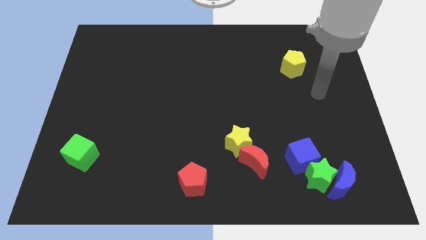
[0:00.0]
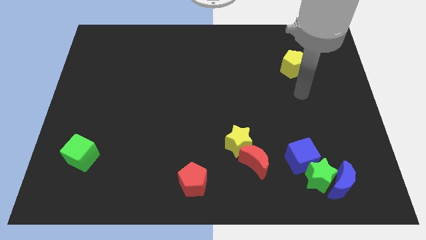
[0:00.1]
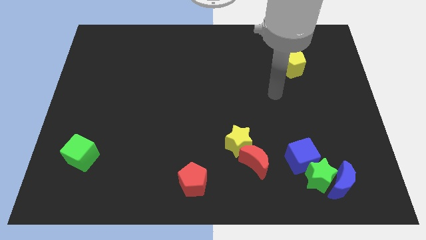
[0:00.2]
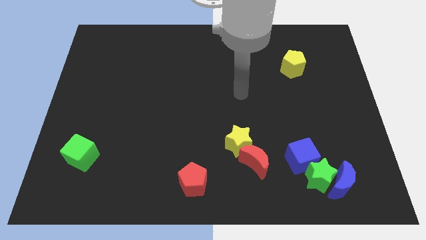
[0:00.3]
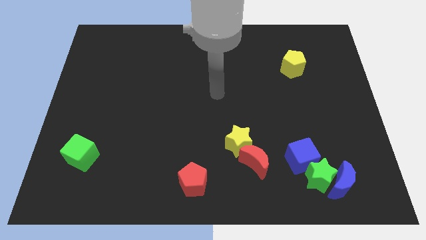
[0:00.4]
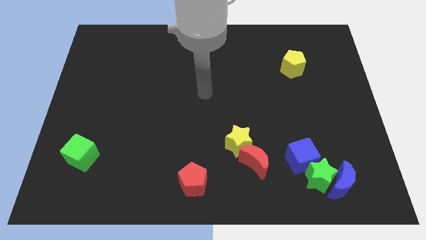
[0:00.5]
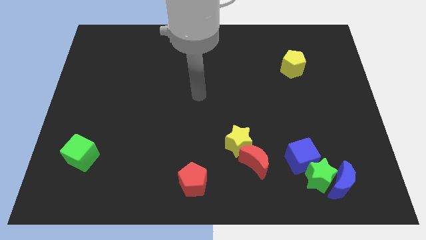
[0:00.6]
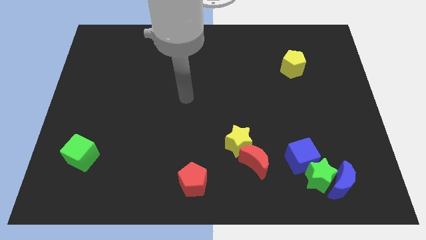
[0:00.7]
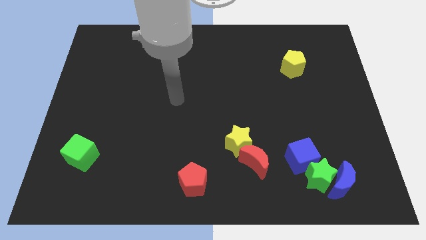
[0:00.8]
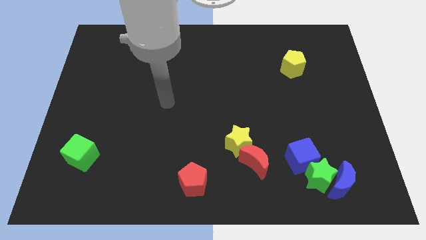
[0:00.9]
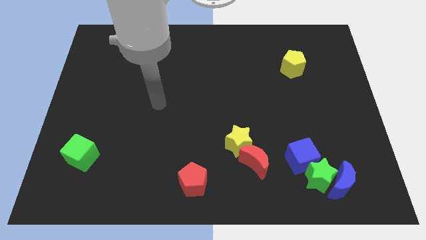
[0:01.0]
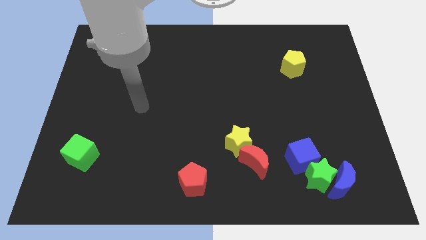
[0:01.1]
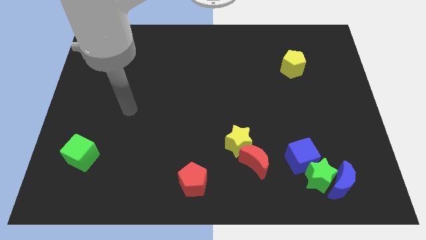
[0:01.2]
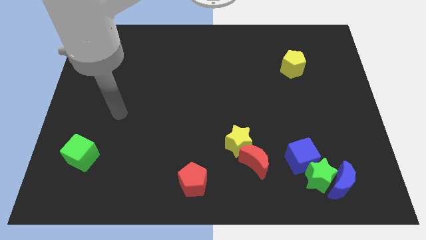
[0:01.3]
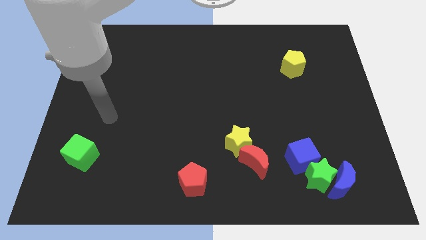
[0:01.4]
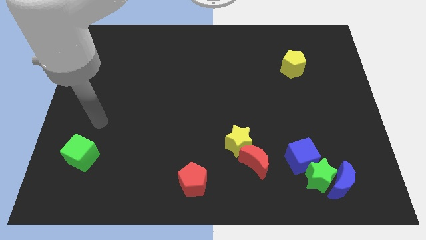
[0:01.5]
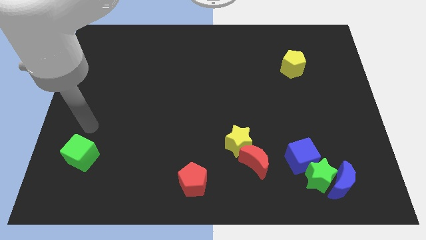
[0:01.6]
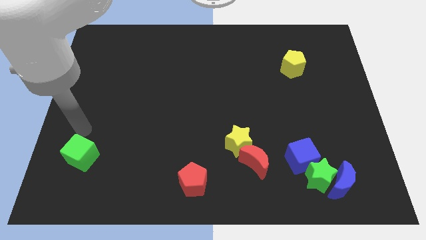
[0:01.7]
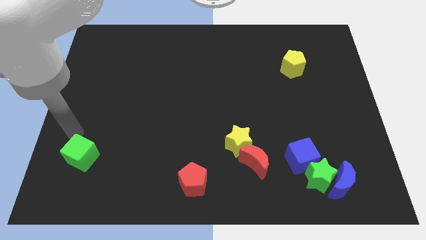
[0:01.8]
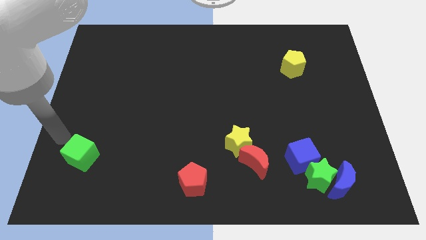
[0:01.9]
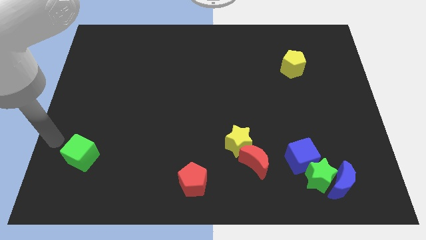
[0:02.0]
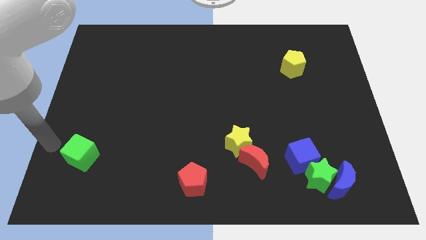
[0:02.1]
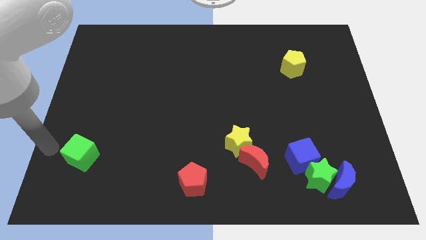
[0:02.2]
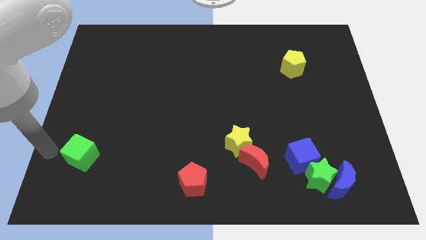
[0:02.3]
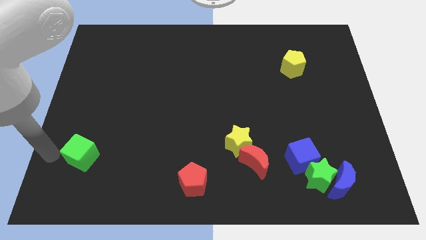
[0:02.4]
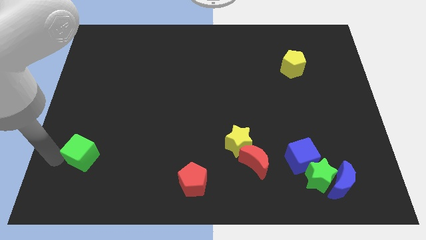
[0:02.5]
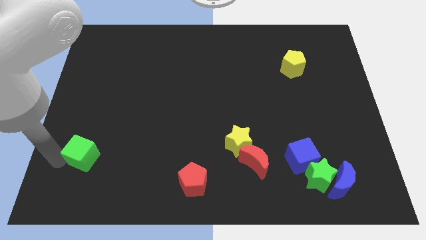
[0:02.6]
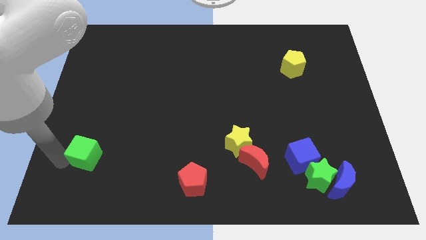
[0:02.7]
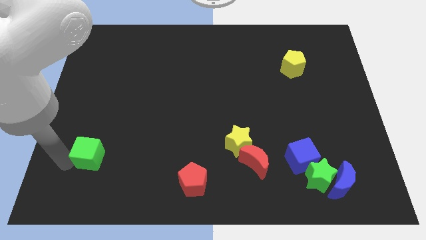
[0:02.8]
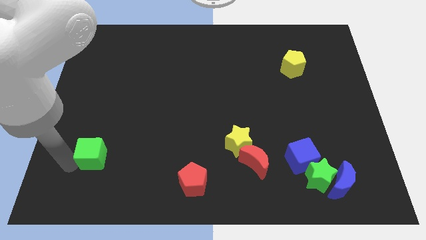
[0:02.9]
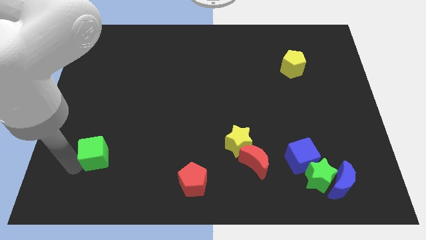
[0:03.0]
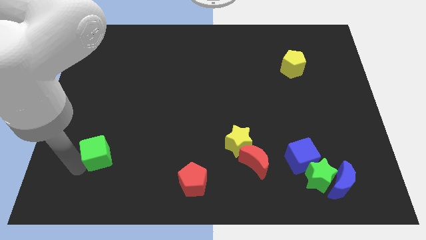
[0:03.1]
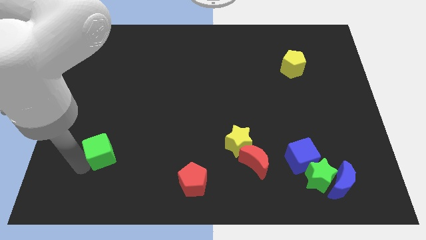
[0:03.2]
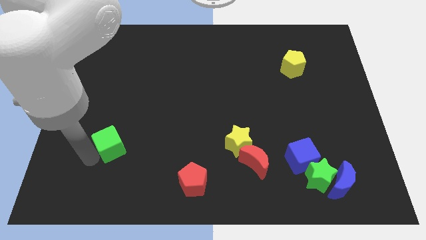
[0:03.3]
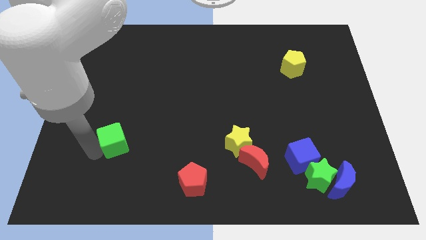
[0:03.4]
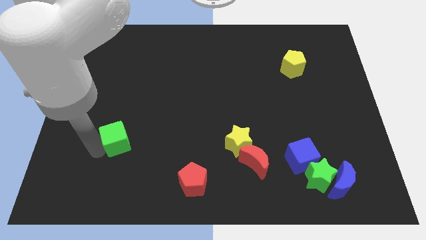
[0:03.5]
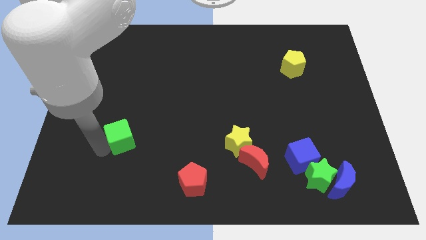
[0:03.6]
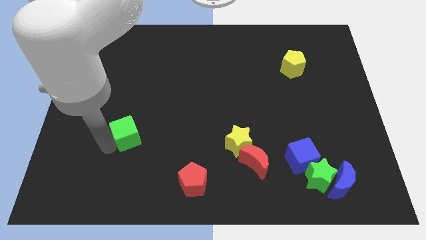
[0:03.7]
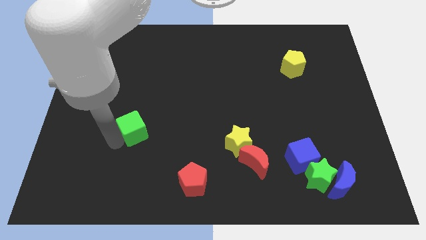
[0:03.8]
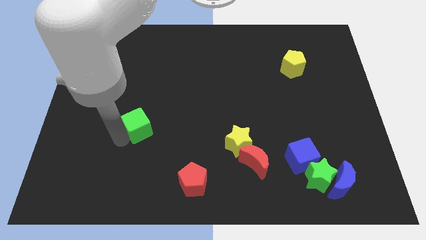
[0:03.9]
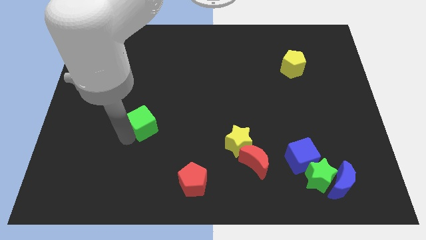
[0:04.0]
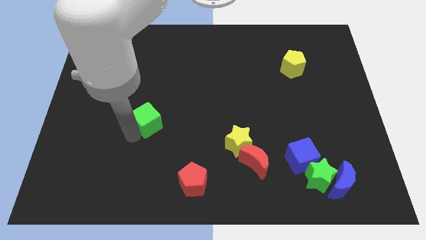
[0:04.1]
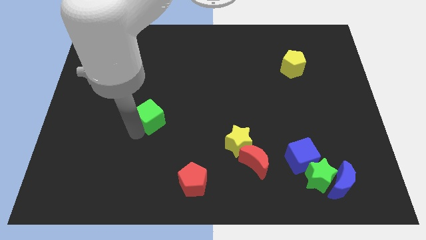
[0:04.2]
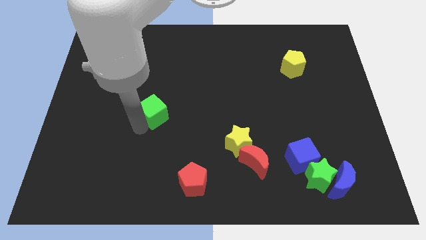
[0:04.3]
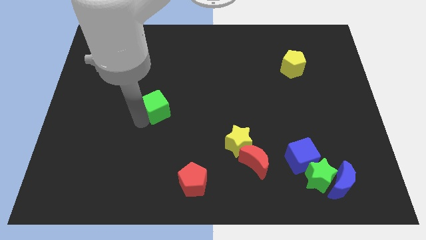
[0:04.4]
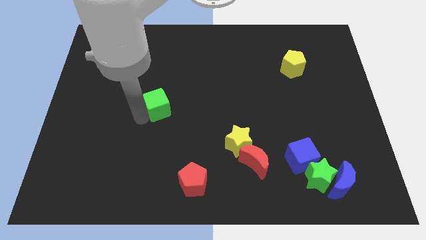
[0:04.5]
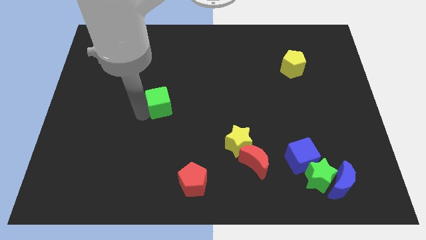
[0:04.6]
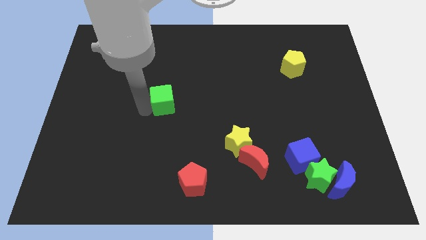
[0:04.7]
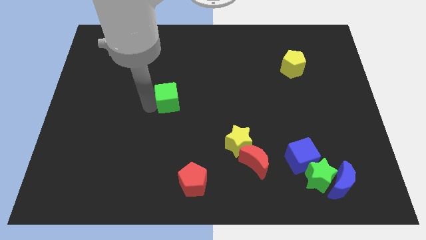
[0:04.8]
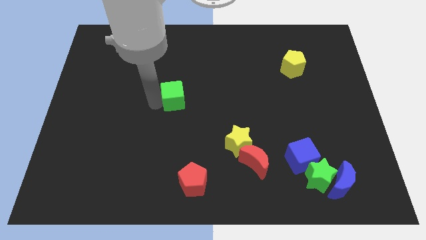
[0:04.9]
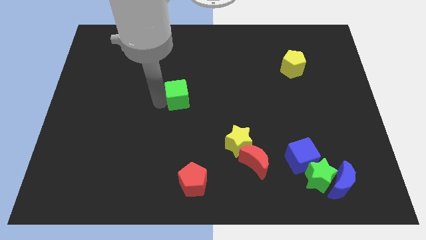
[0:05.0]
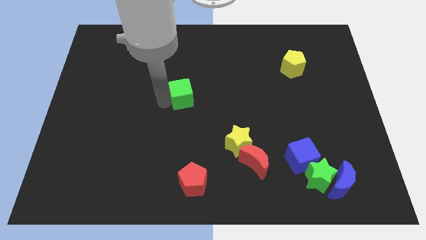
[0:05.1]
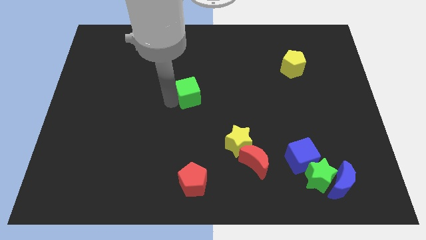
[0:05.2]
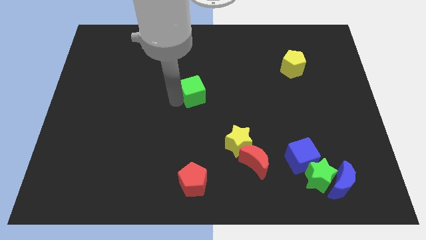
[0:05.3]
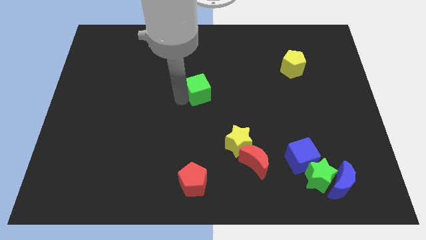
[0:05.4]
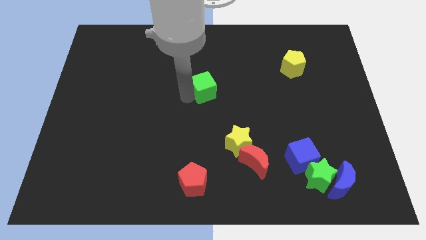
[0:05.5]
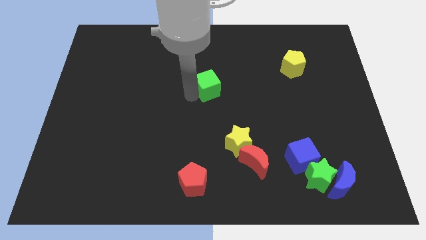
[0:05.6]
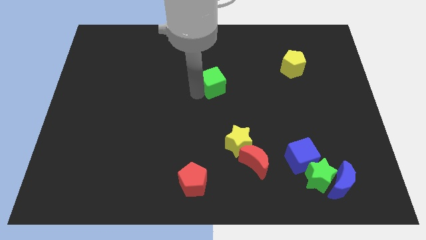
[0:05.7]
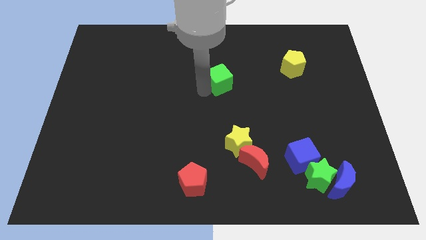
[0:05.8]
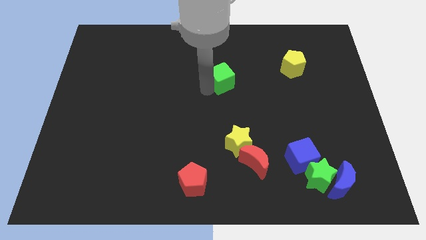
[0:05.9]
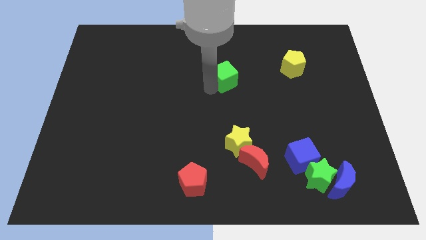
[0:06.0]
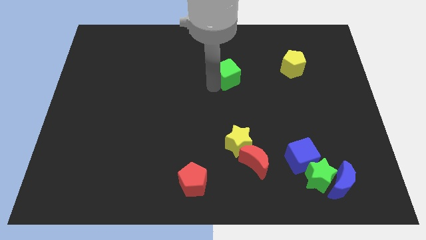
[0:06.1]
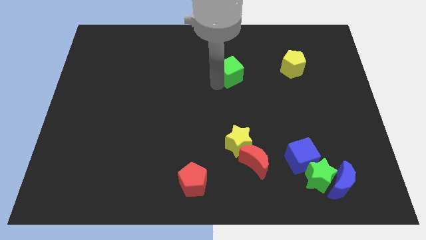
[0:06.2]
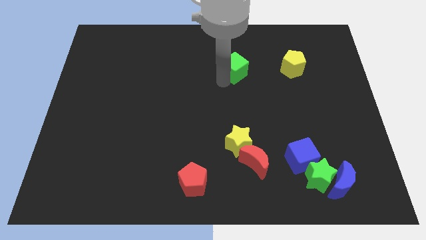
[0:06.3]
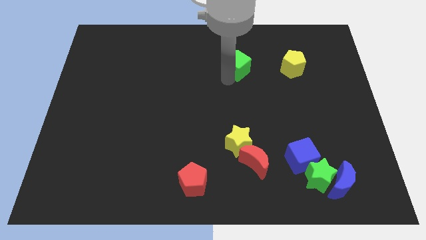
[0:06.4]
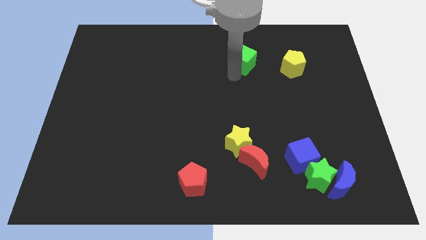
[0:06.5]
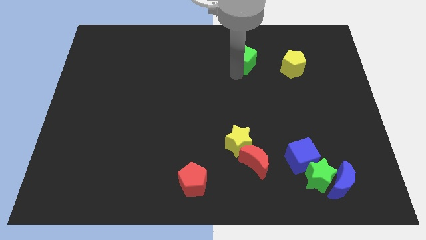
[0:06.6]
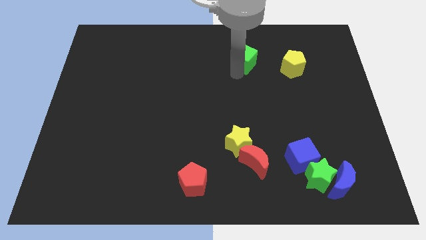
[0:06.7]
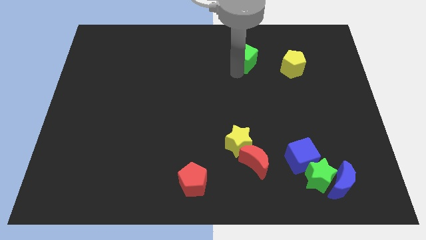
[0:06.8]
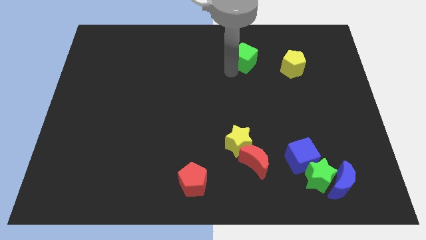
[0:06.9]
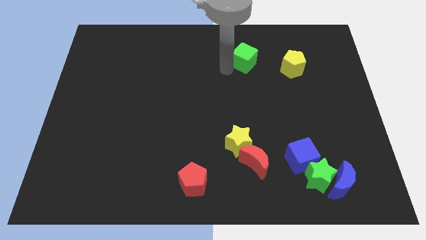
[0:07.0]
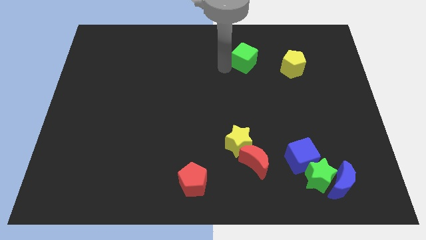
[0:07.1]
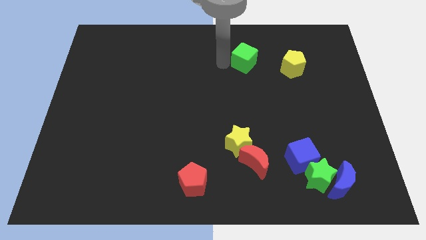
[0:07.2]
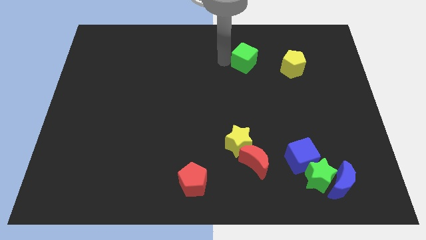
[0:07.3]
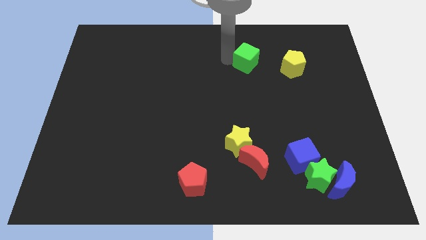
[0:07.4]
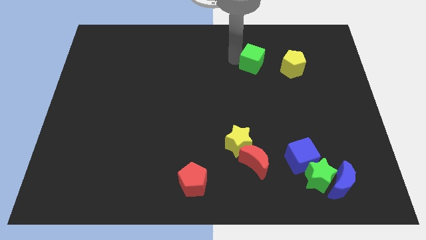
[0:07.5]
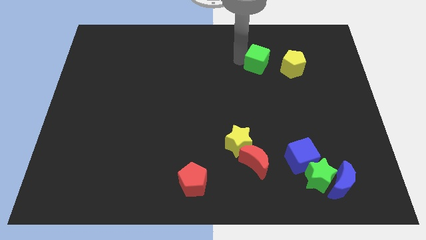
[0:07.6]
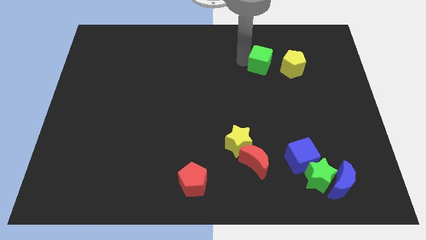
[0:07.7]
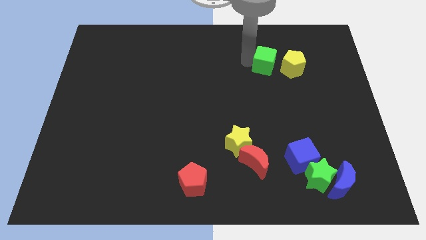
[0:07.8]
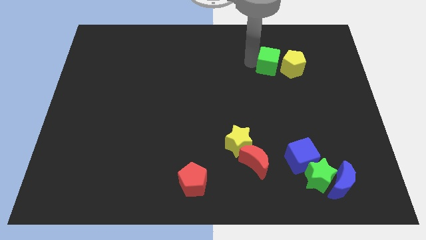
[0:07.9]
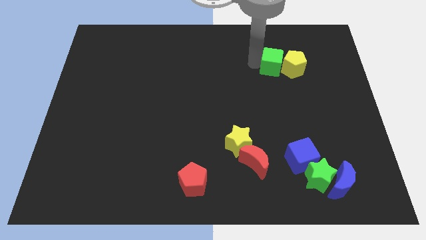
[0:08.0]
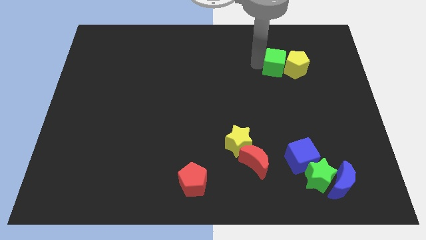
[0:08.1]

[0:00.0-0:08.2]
push the green cube to the yellow pentagon
